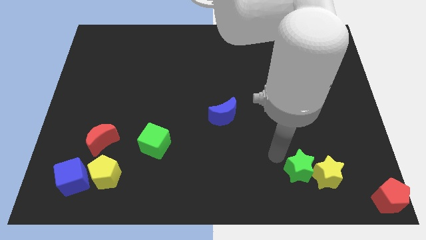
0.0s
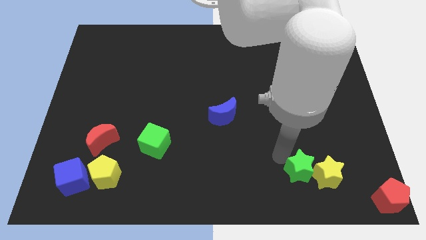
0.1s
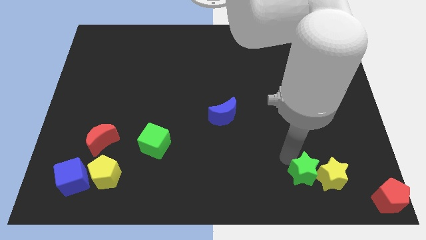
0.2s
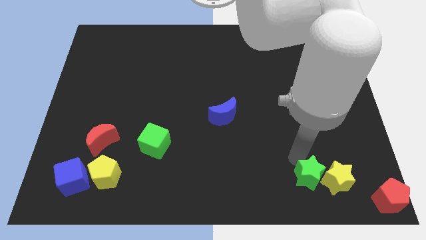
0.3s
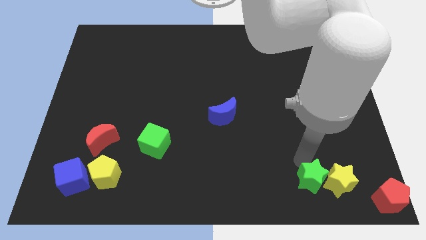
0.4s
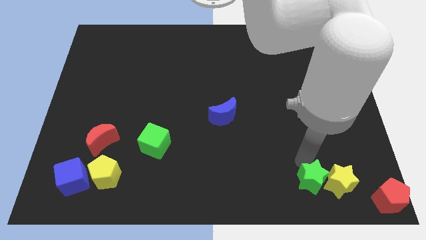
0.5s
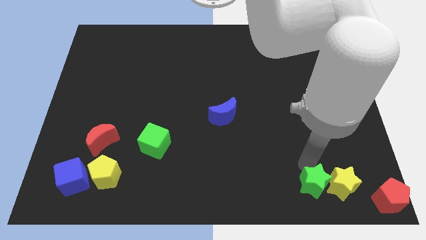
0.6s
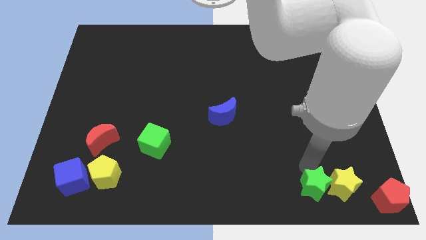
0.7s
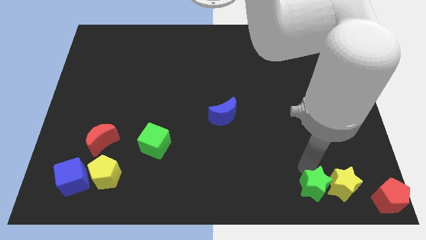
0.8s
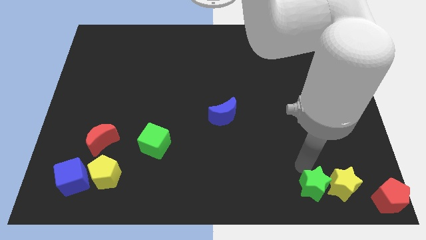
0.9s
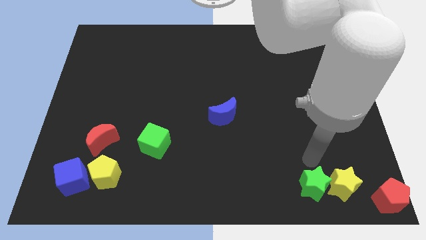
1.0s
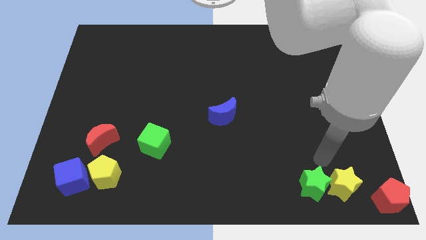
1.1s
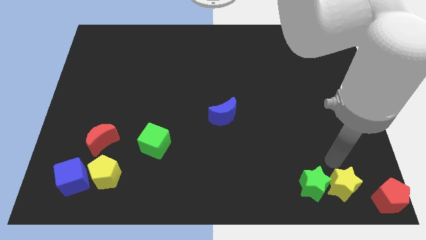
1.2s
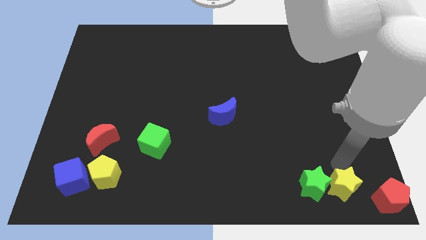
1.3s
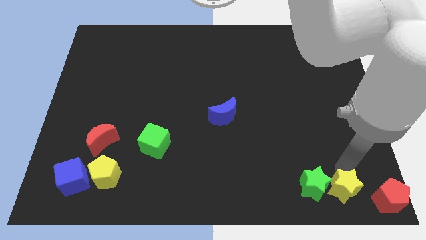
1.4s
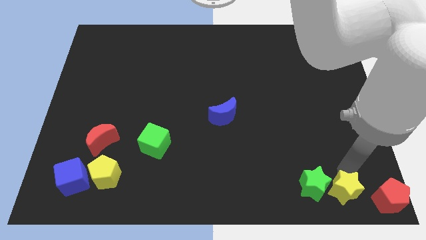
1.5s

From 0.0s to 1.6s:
slide the yellow star and the green star towards the bottom

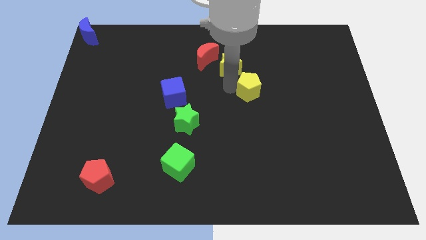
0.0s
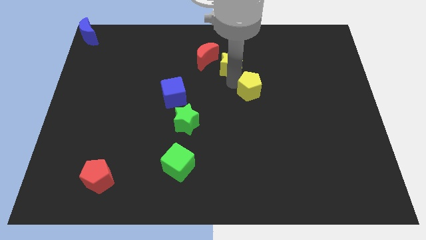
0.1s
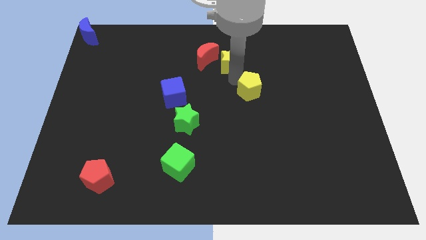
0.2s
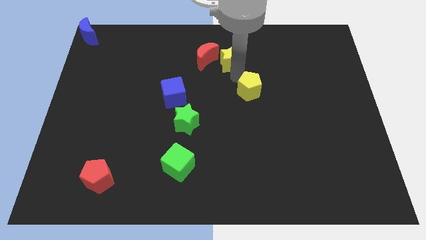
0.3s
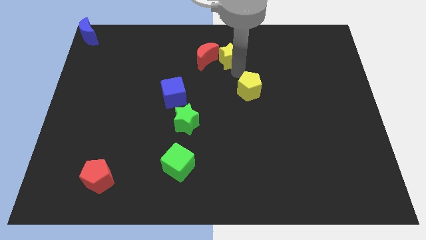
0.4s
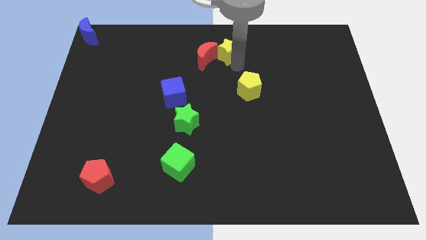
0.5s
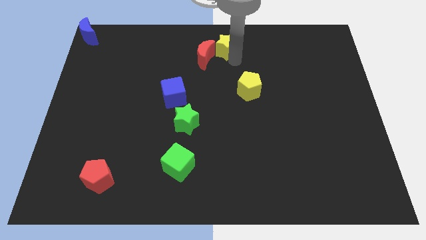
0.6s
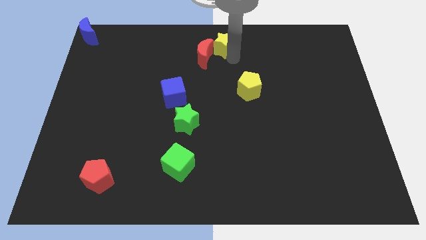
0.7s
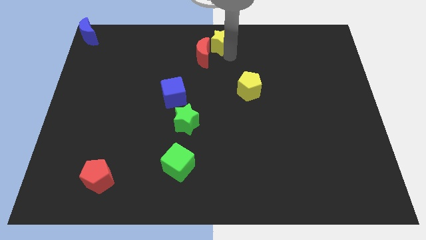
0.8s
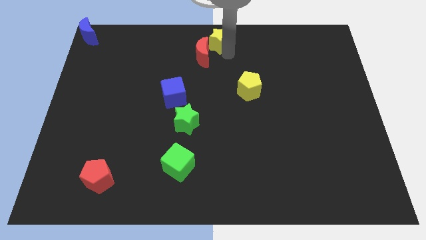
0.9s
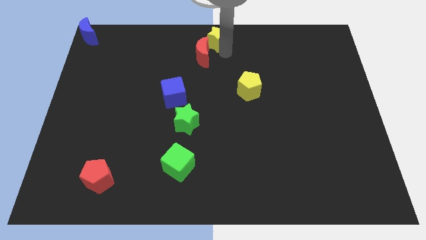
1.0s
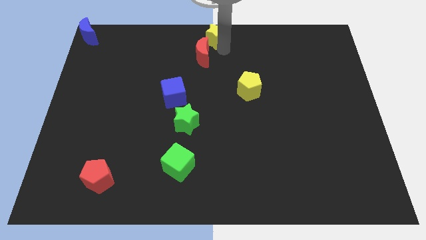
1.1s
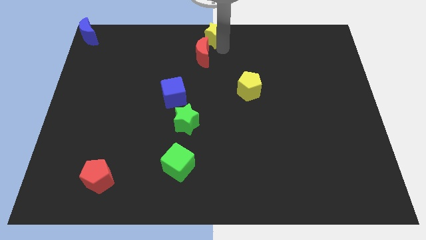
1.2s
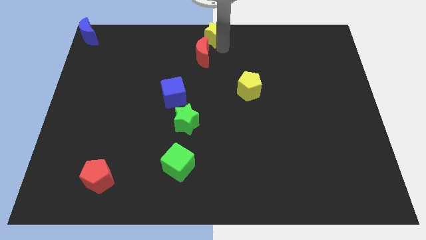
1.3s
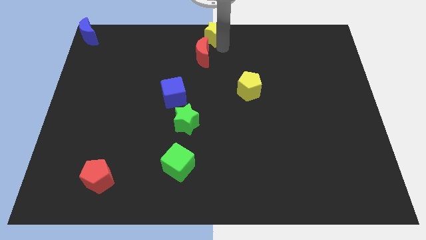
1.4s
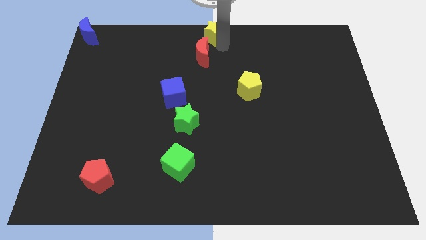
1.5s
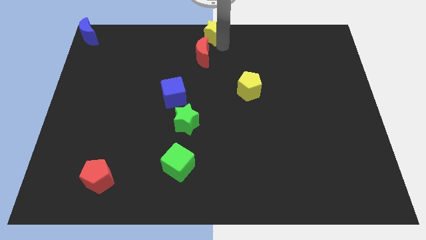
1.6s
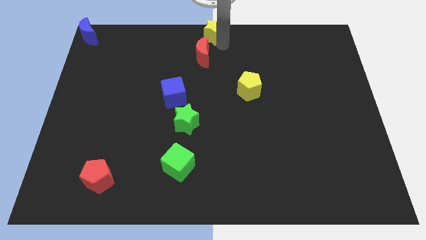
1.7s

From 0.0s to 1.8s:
place the yellow star at the top center of the board

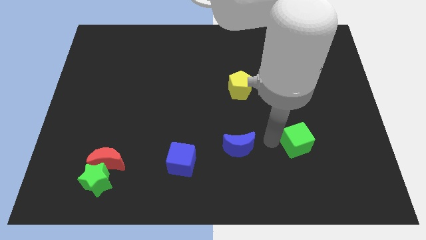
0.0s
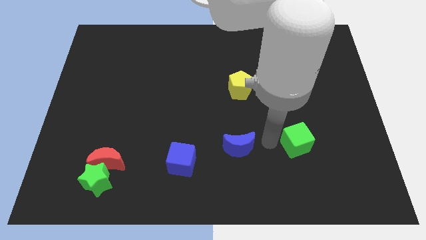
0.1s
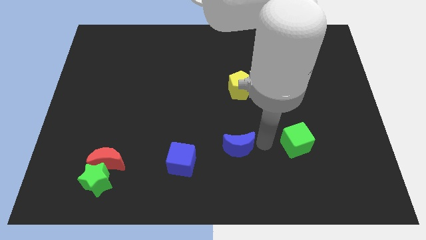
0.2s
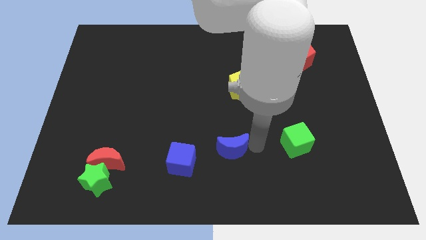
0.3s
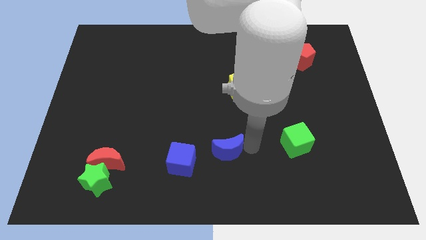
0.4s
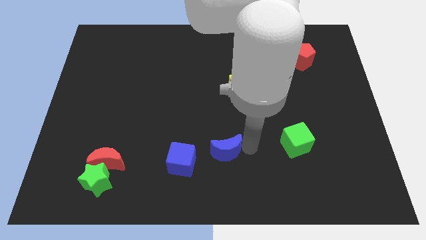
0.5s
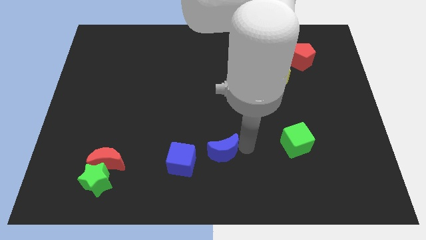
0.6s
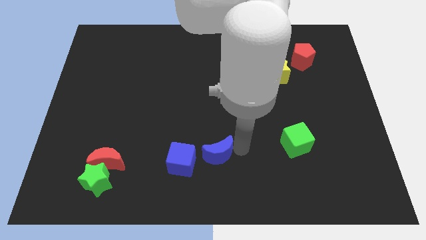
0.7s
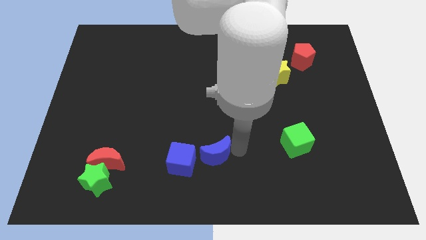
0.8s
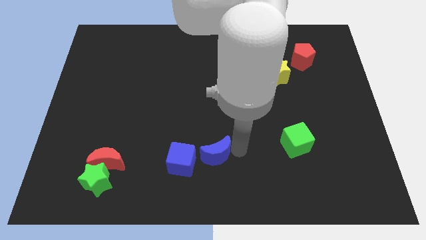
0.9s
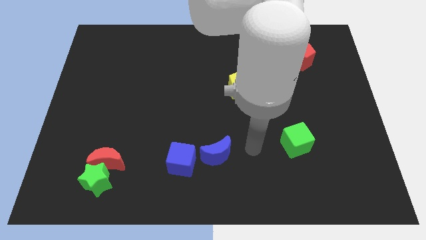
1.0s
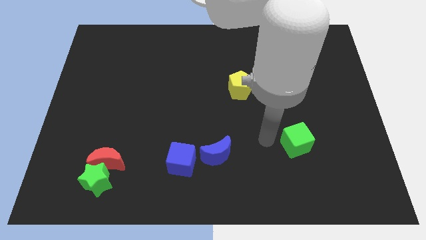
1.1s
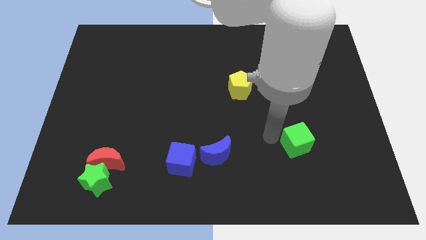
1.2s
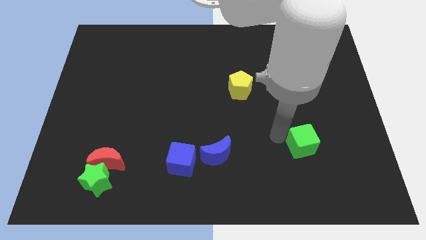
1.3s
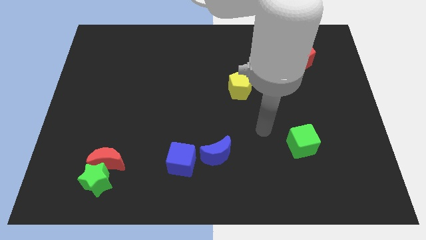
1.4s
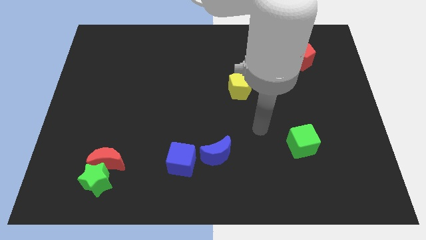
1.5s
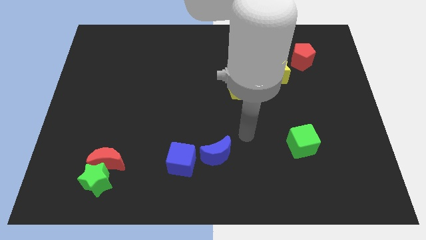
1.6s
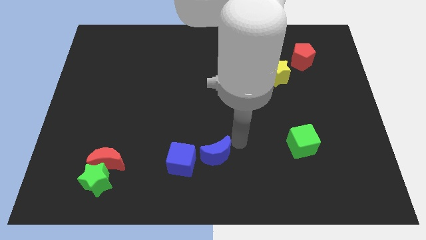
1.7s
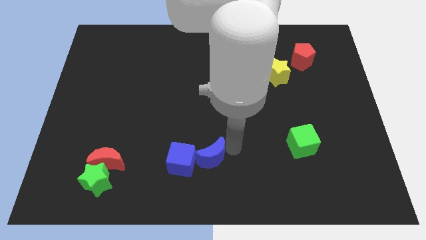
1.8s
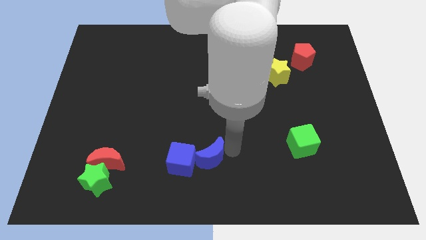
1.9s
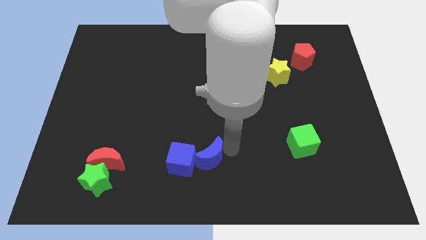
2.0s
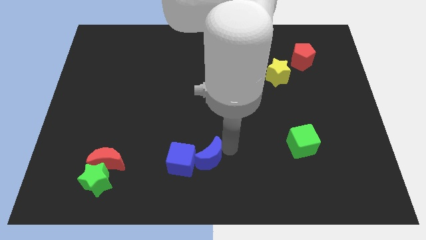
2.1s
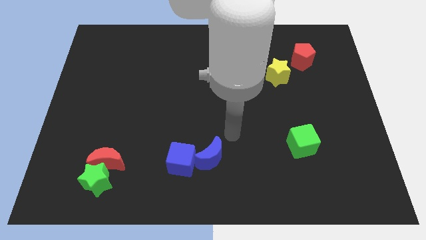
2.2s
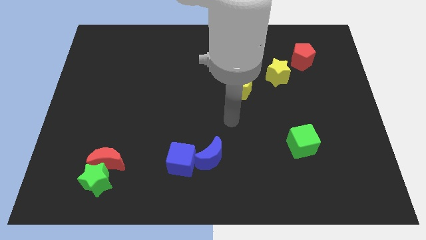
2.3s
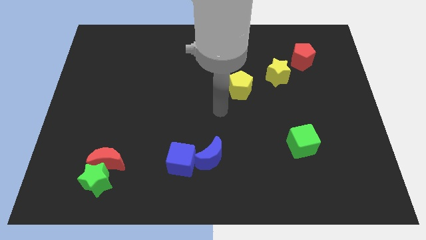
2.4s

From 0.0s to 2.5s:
slightly move the green cube towards the right

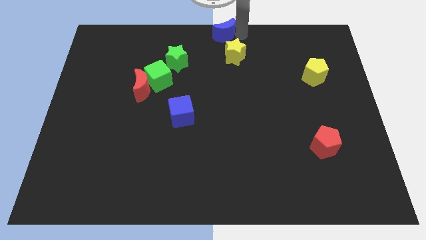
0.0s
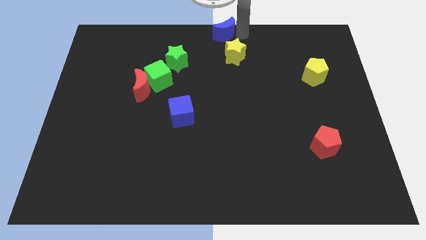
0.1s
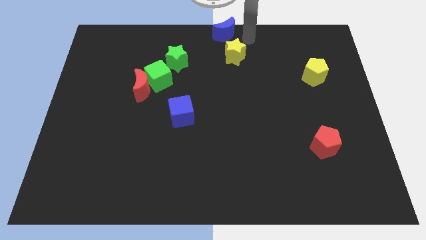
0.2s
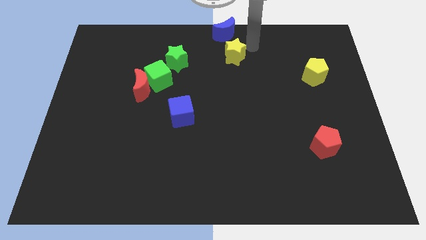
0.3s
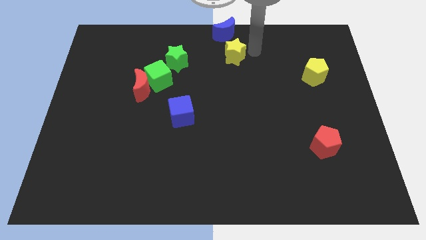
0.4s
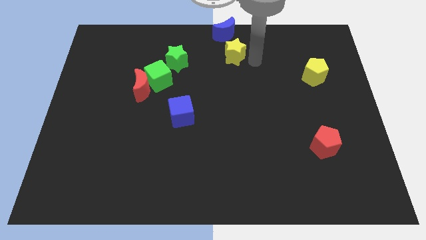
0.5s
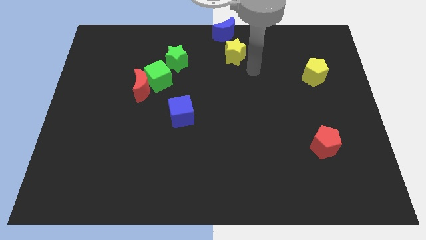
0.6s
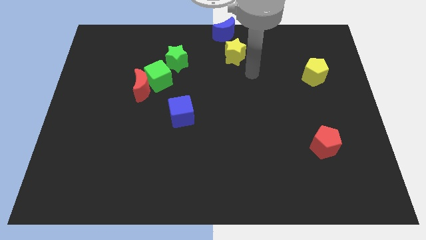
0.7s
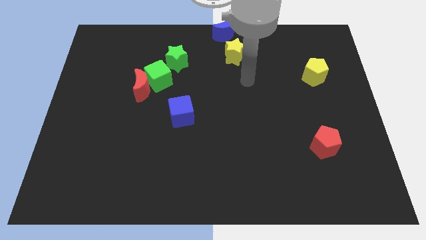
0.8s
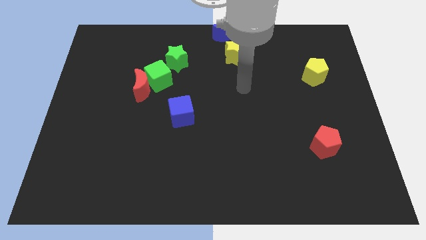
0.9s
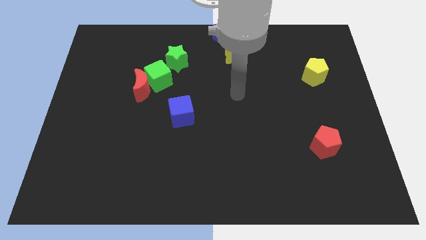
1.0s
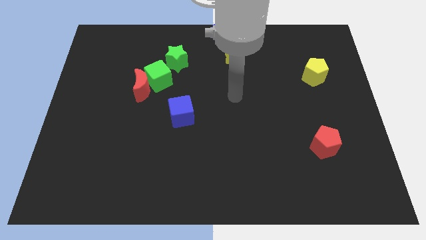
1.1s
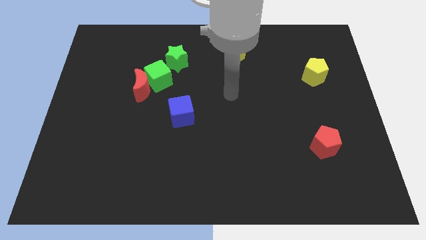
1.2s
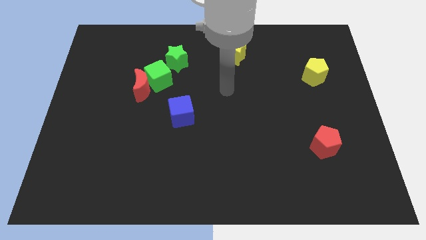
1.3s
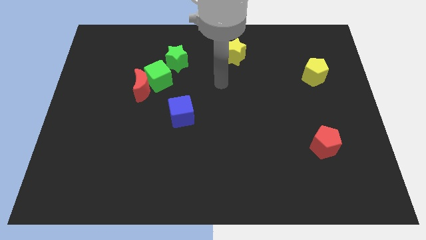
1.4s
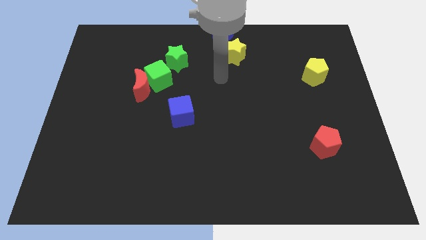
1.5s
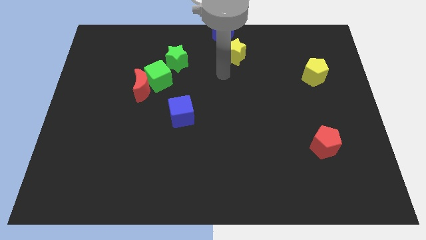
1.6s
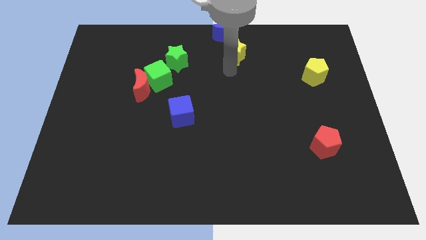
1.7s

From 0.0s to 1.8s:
move the arm around the yellow star

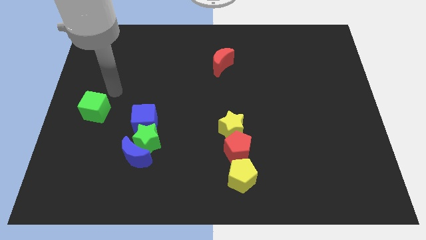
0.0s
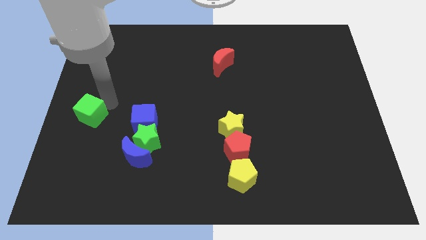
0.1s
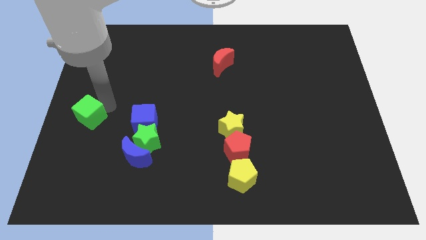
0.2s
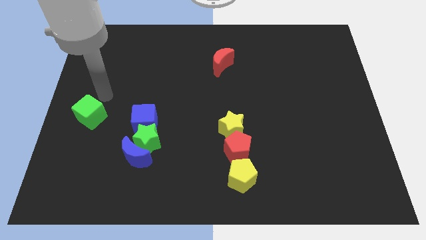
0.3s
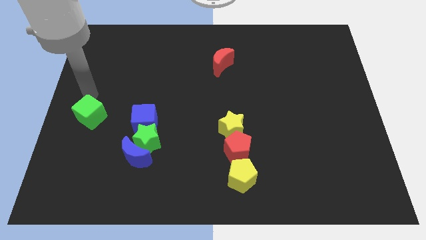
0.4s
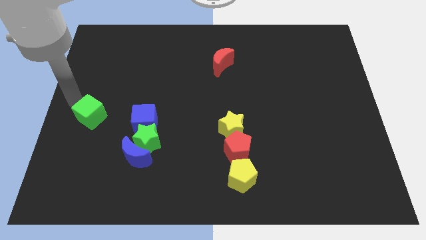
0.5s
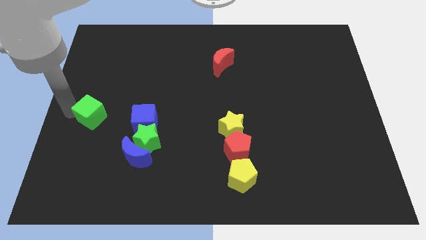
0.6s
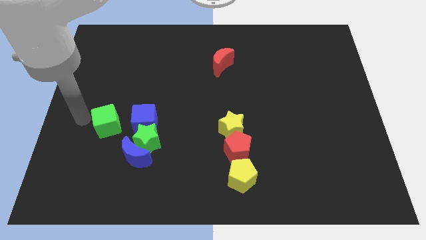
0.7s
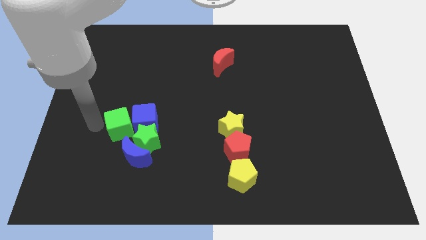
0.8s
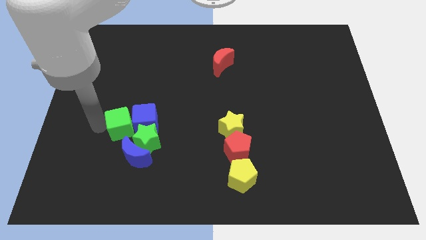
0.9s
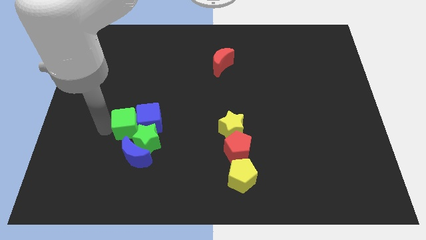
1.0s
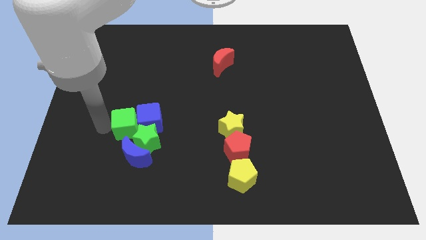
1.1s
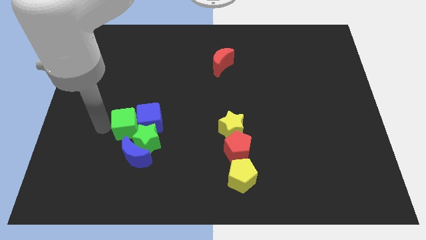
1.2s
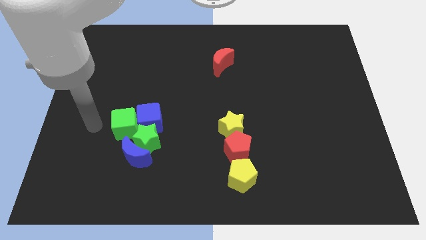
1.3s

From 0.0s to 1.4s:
move the green cube to the left of the blue cube
